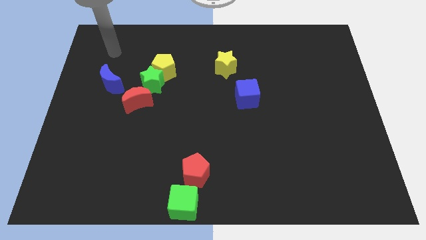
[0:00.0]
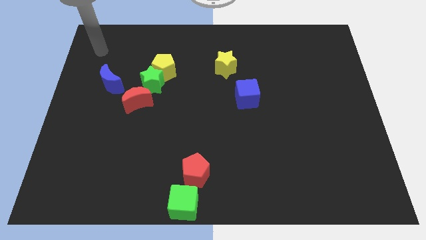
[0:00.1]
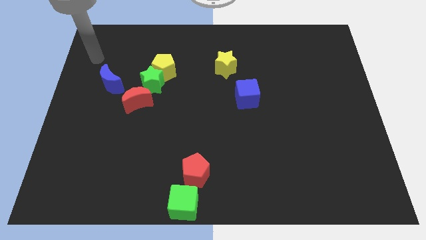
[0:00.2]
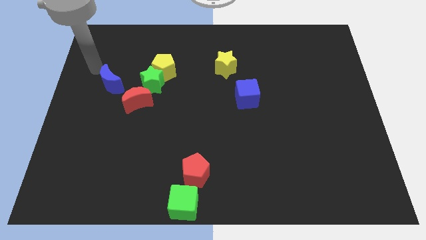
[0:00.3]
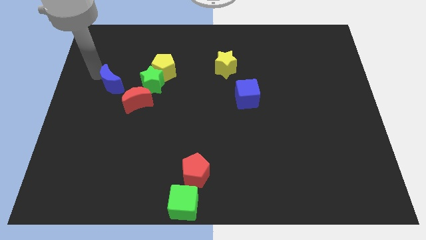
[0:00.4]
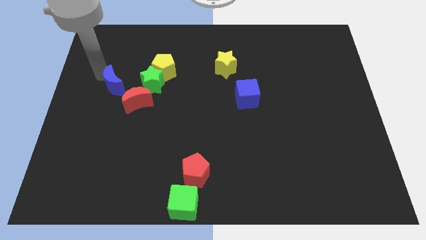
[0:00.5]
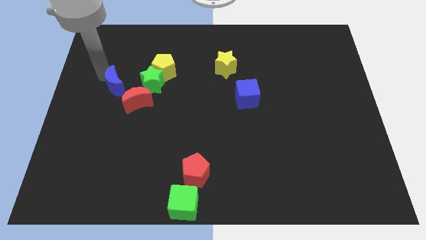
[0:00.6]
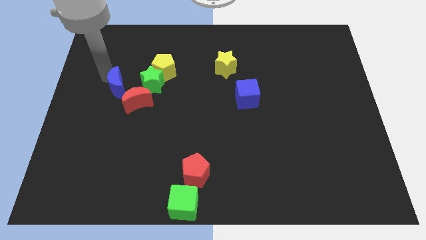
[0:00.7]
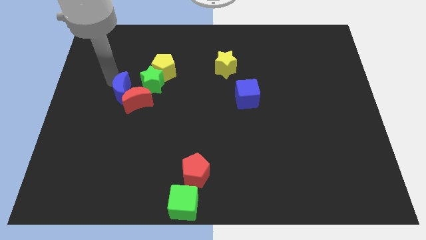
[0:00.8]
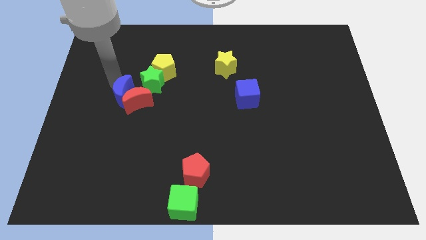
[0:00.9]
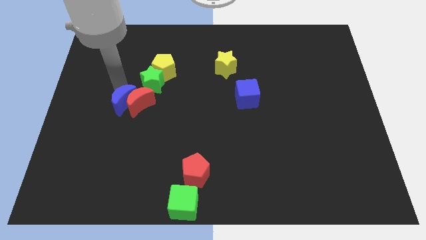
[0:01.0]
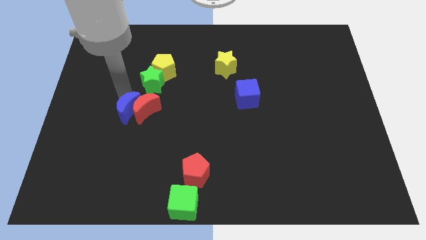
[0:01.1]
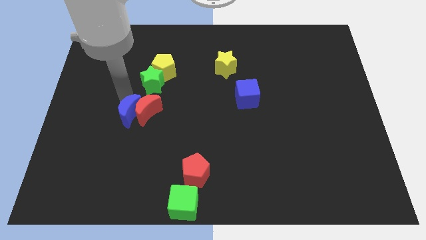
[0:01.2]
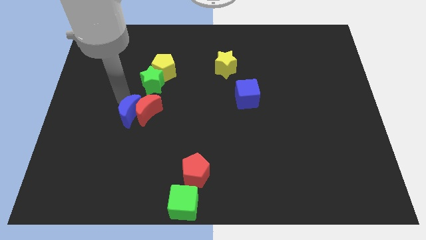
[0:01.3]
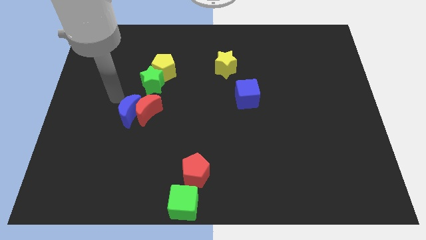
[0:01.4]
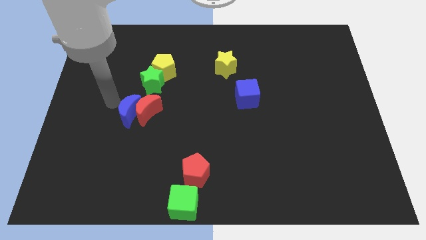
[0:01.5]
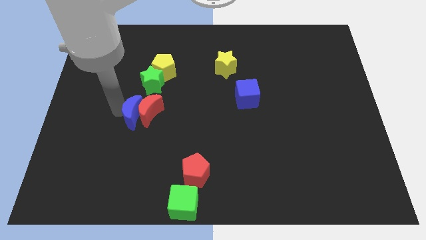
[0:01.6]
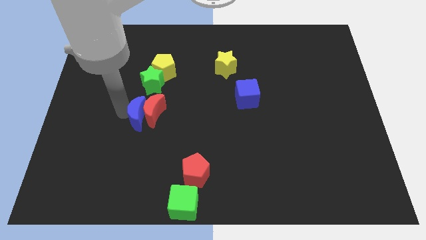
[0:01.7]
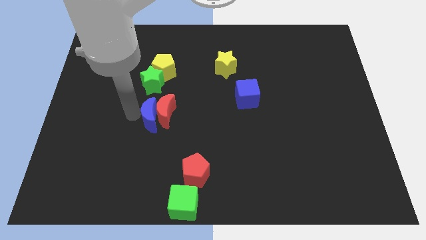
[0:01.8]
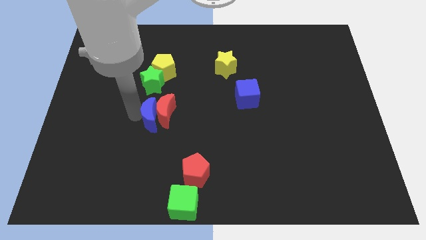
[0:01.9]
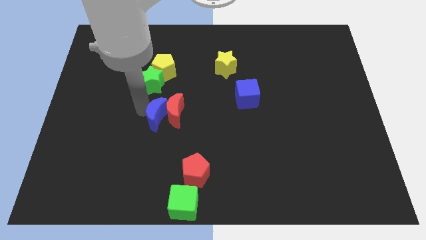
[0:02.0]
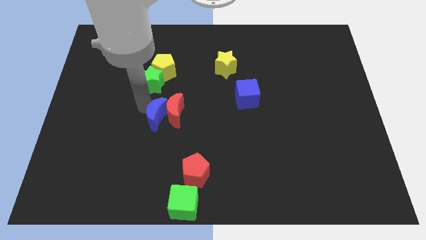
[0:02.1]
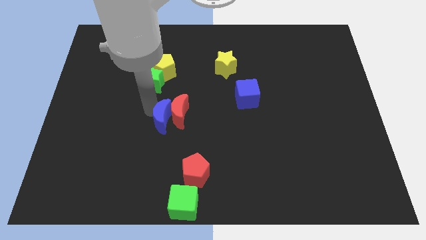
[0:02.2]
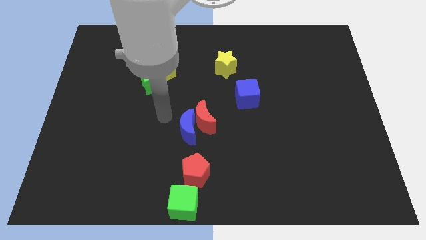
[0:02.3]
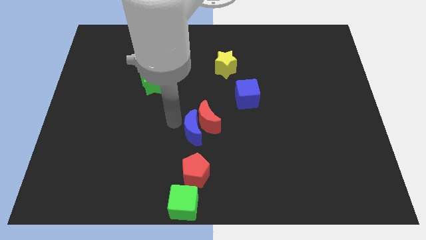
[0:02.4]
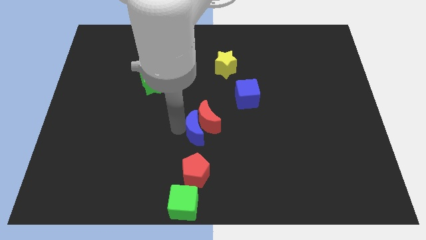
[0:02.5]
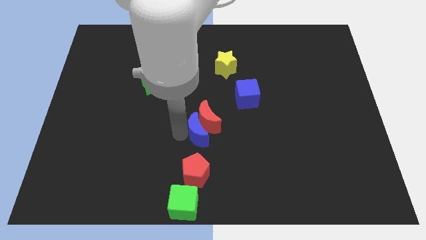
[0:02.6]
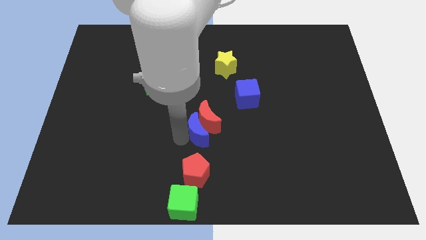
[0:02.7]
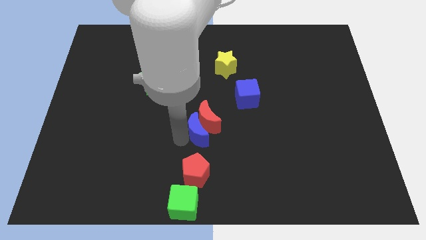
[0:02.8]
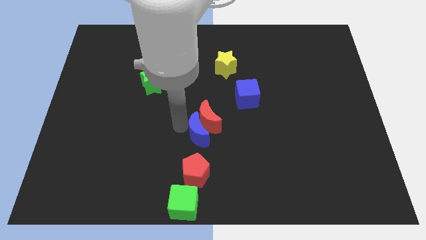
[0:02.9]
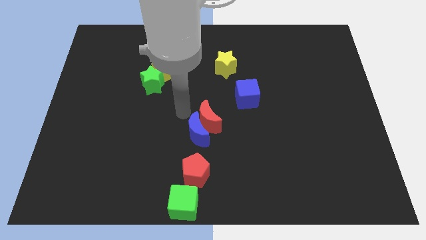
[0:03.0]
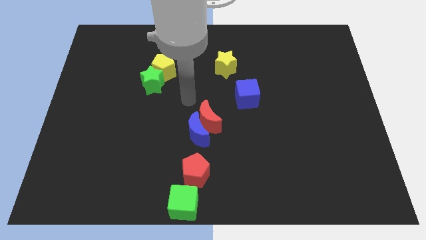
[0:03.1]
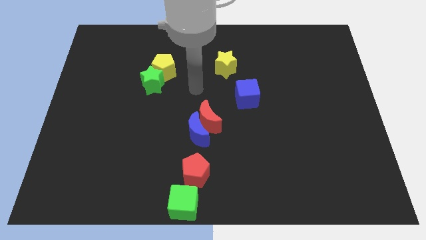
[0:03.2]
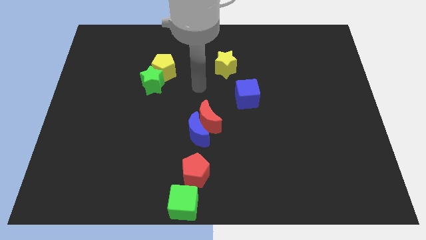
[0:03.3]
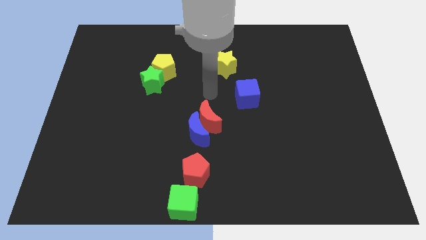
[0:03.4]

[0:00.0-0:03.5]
push the blue moon into the red moon

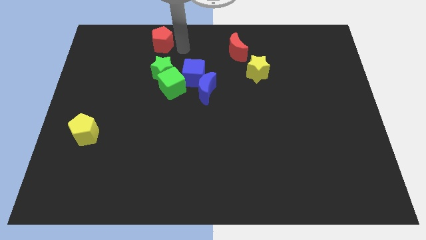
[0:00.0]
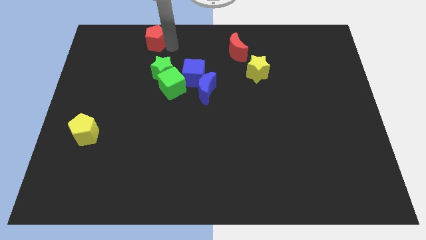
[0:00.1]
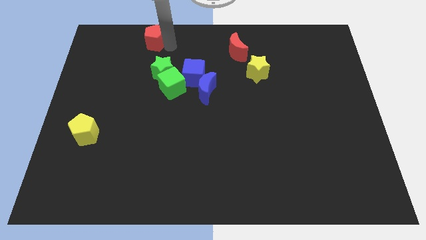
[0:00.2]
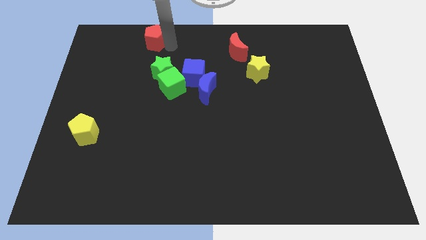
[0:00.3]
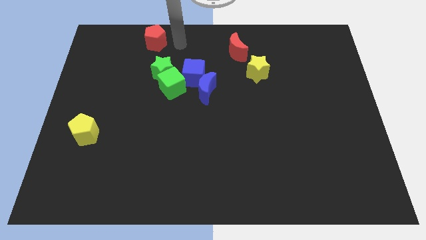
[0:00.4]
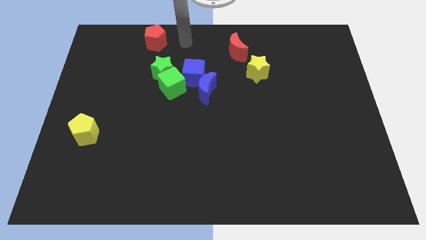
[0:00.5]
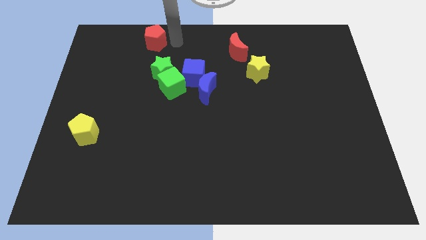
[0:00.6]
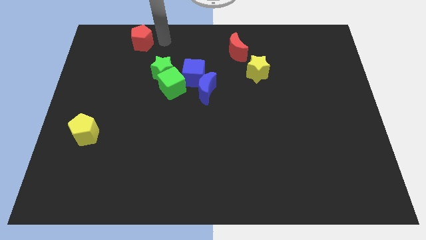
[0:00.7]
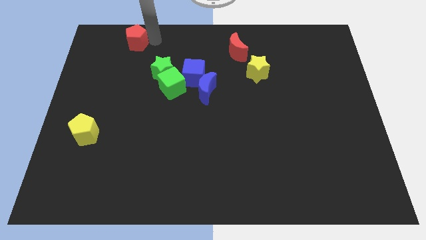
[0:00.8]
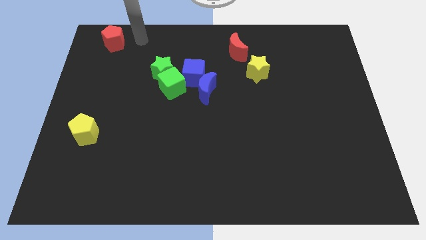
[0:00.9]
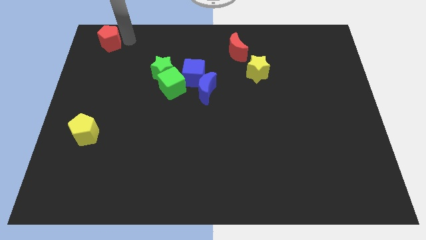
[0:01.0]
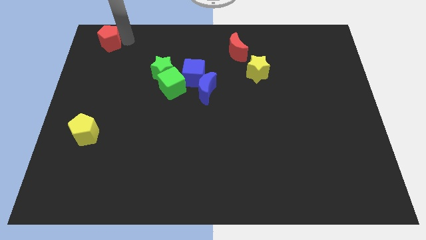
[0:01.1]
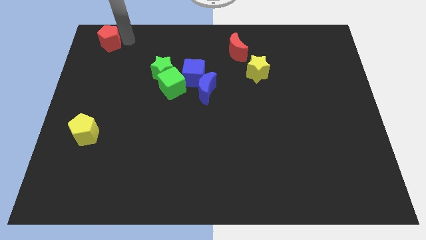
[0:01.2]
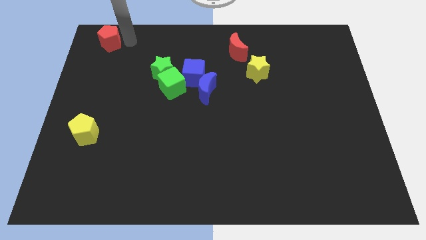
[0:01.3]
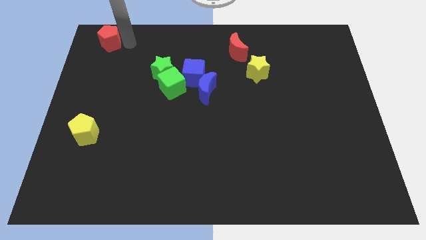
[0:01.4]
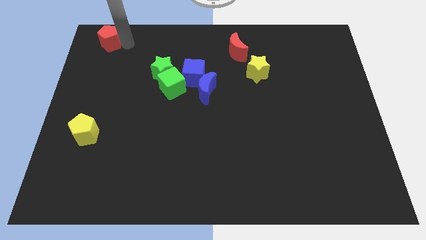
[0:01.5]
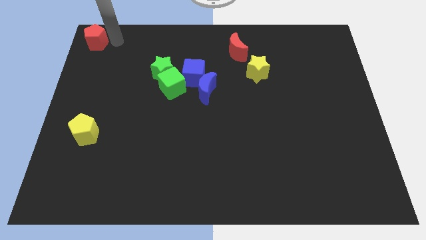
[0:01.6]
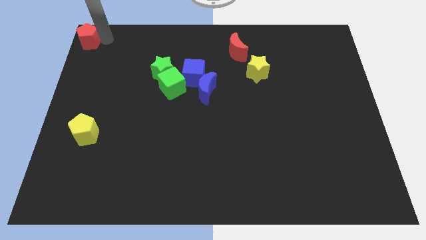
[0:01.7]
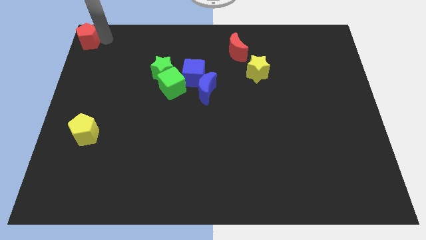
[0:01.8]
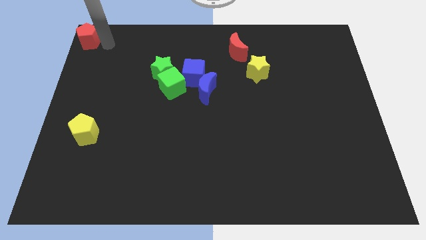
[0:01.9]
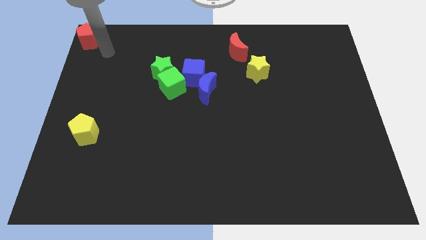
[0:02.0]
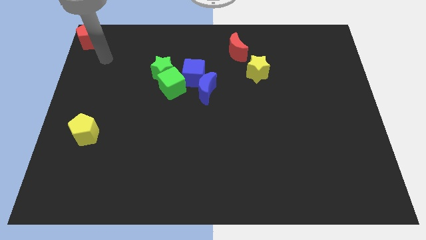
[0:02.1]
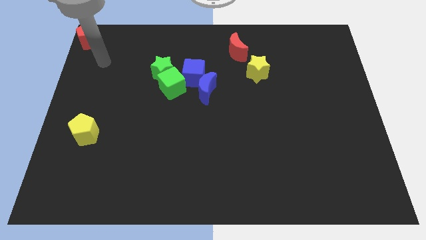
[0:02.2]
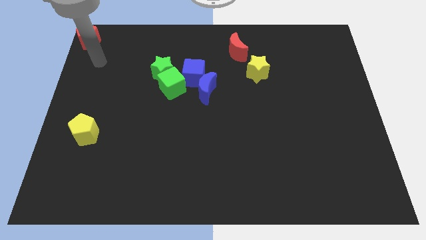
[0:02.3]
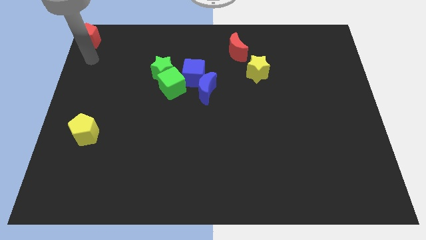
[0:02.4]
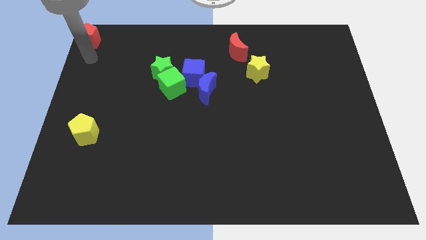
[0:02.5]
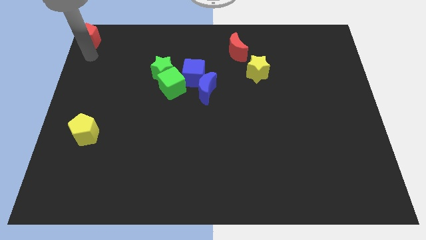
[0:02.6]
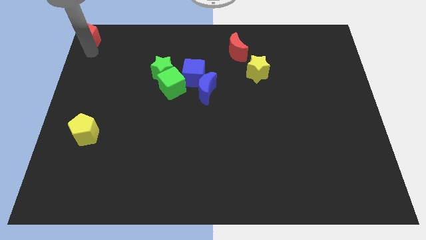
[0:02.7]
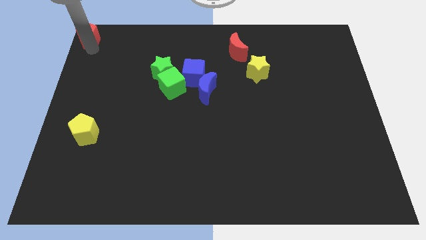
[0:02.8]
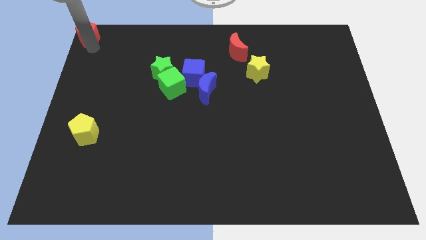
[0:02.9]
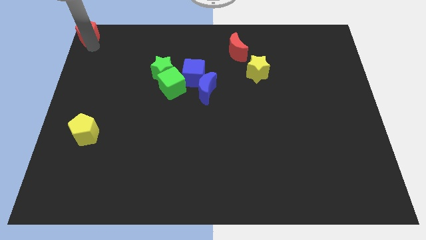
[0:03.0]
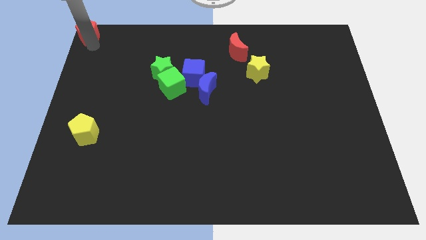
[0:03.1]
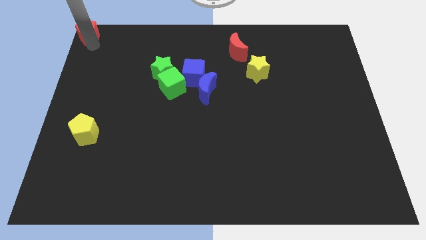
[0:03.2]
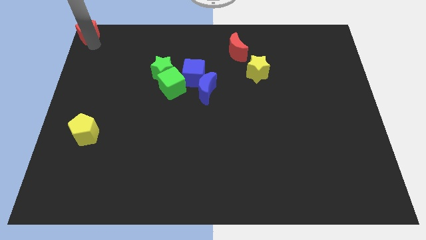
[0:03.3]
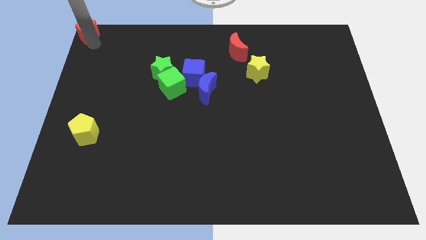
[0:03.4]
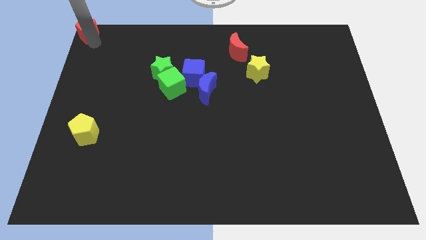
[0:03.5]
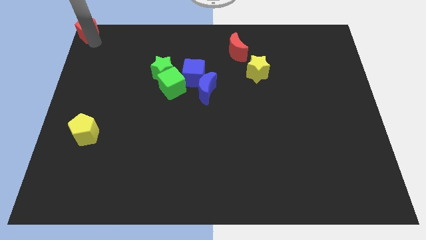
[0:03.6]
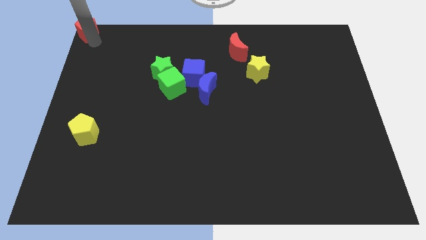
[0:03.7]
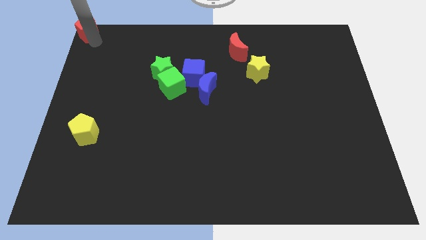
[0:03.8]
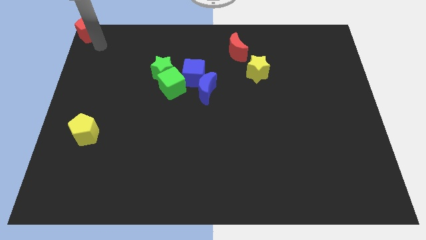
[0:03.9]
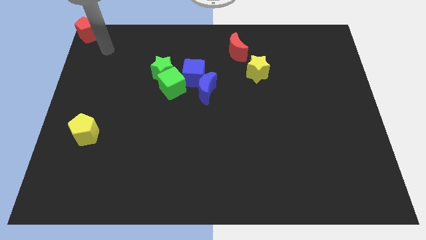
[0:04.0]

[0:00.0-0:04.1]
place red pentagon in the top left corner

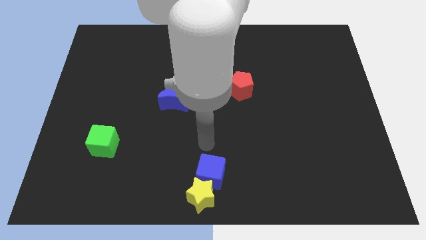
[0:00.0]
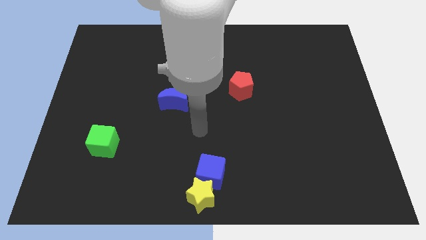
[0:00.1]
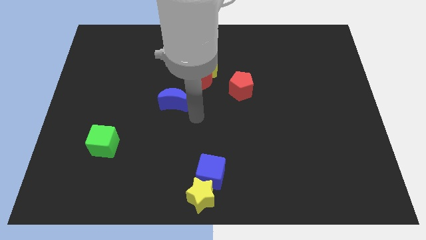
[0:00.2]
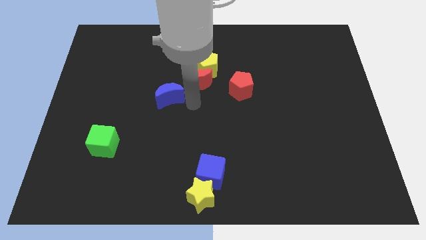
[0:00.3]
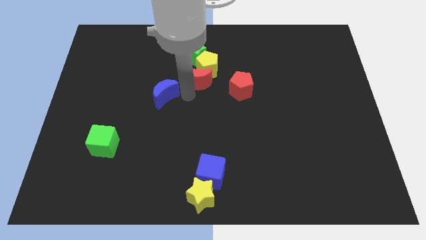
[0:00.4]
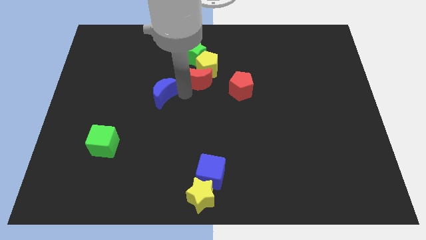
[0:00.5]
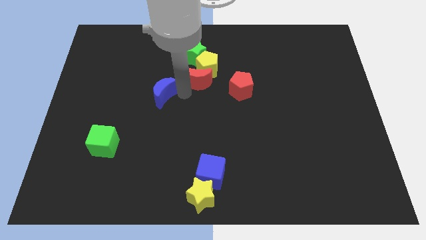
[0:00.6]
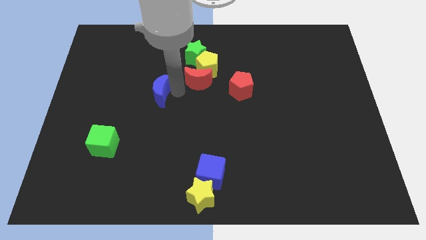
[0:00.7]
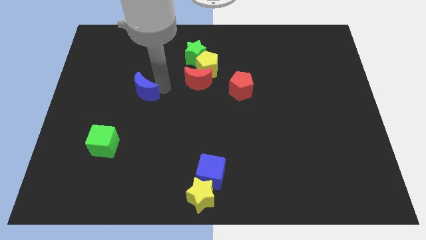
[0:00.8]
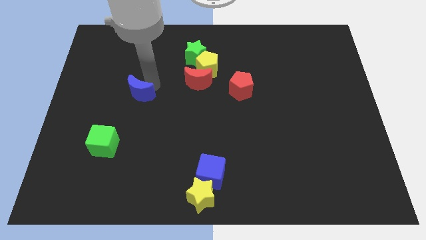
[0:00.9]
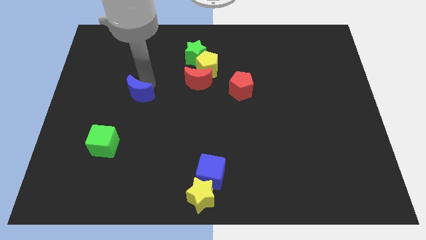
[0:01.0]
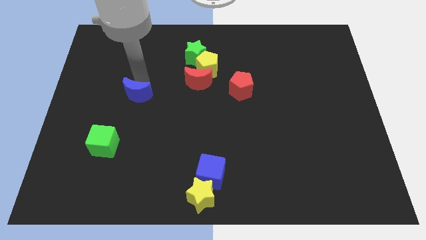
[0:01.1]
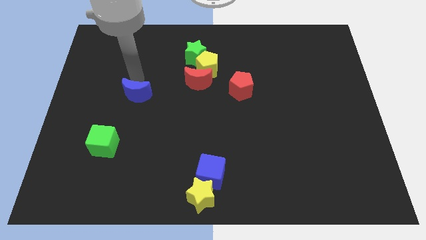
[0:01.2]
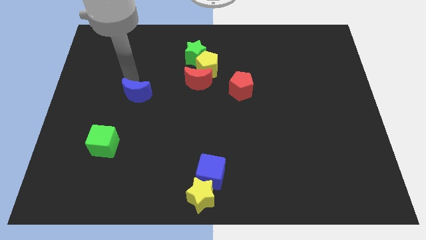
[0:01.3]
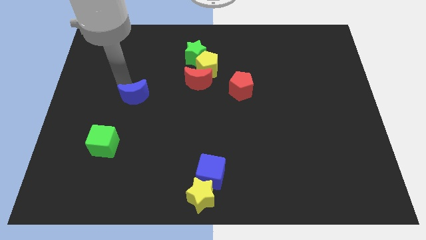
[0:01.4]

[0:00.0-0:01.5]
place the blue crescent above the green cube
